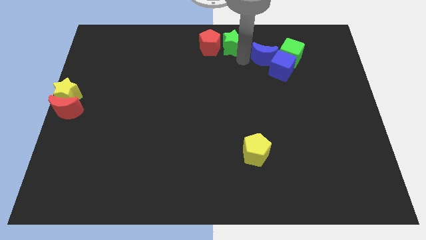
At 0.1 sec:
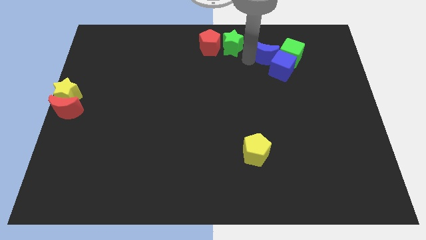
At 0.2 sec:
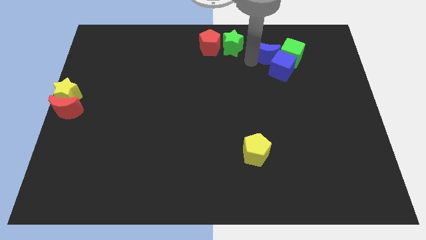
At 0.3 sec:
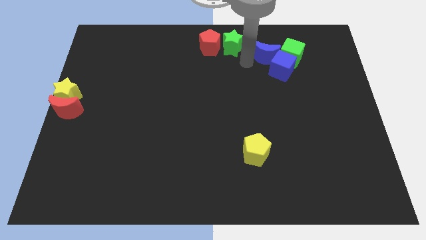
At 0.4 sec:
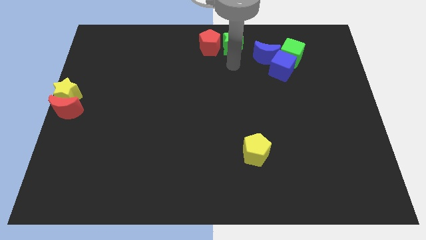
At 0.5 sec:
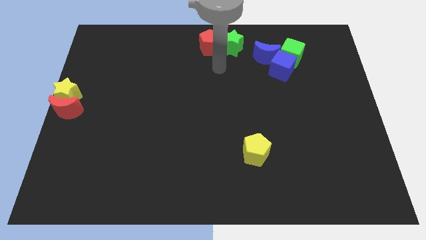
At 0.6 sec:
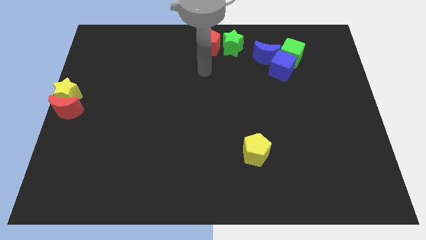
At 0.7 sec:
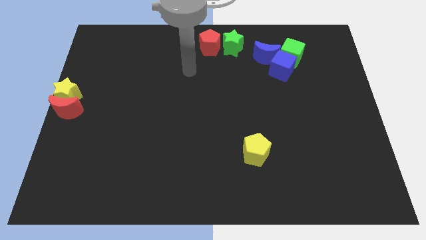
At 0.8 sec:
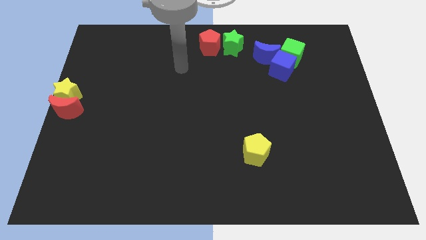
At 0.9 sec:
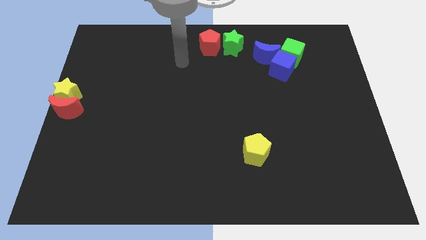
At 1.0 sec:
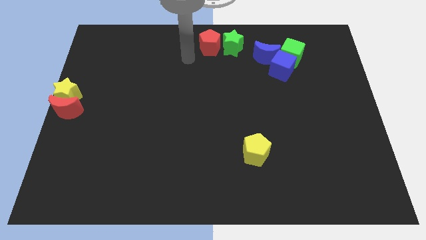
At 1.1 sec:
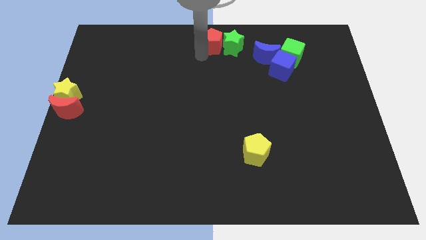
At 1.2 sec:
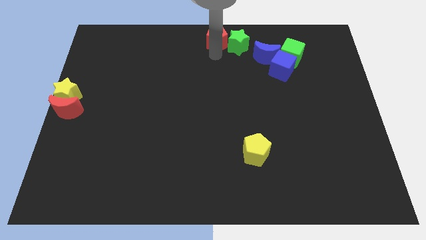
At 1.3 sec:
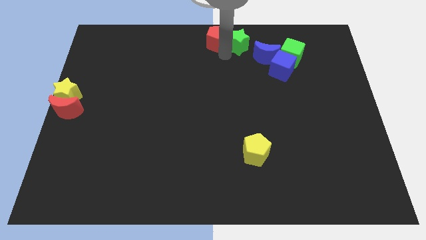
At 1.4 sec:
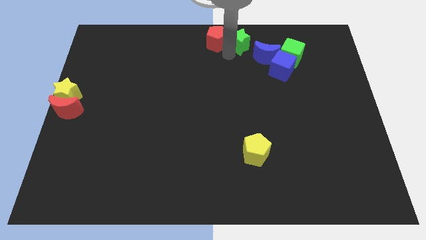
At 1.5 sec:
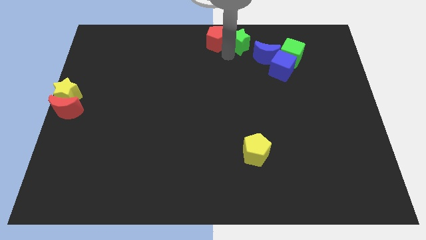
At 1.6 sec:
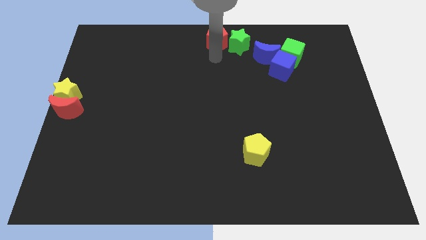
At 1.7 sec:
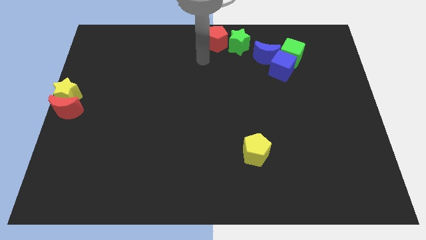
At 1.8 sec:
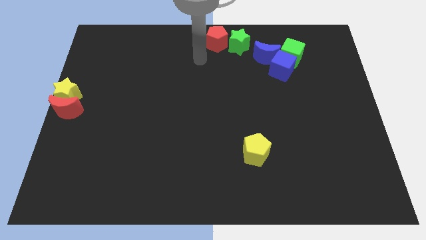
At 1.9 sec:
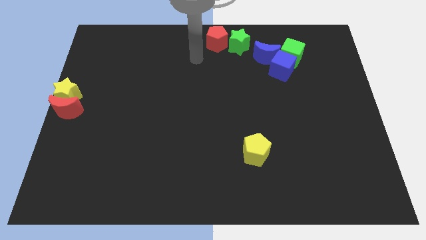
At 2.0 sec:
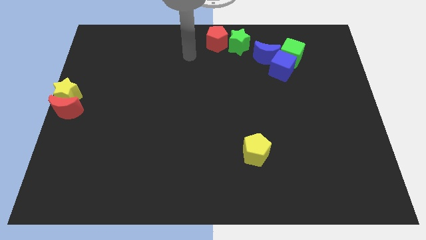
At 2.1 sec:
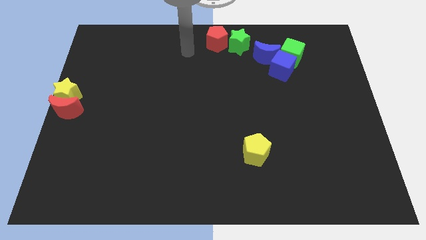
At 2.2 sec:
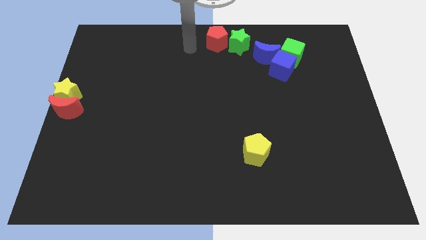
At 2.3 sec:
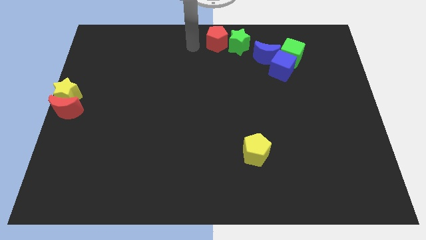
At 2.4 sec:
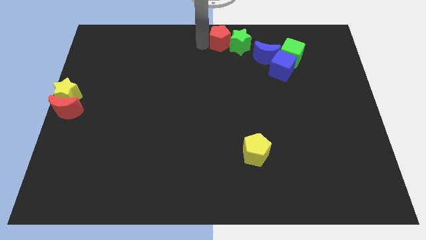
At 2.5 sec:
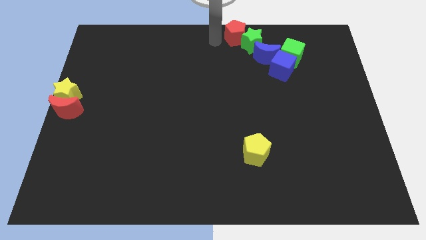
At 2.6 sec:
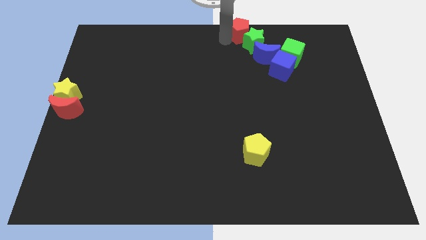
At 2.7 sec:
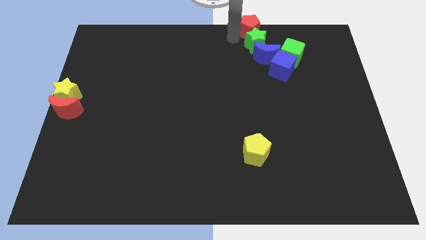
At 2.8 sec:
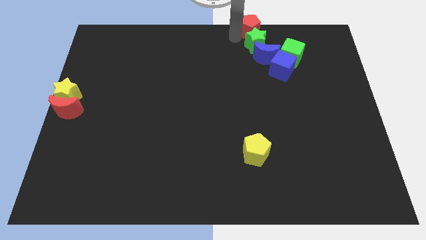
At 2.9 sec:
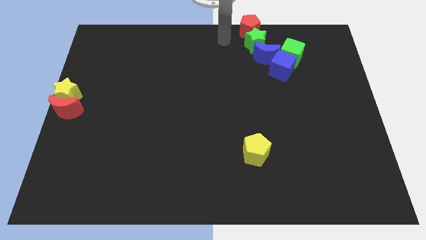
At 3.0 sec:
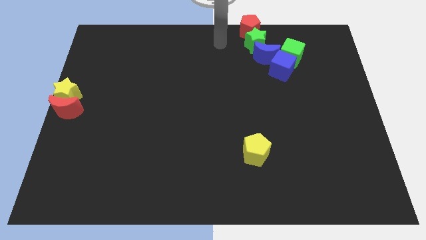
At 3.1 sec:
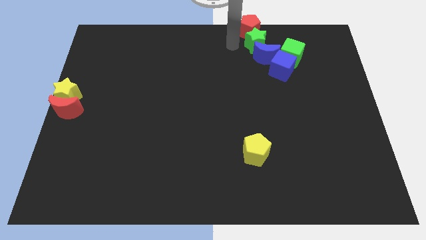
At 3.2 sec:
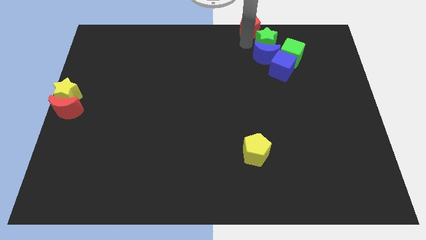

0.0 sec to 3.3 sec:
push the red pentagon above to the green star

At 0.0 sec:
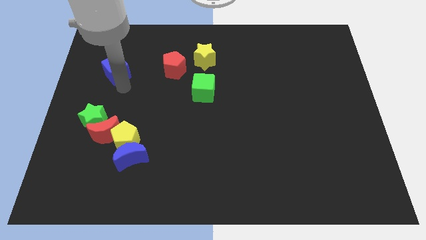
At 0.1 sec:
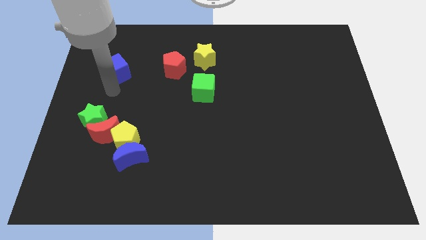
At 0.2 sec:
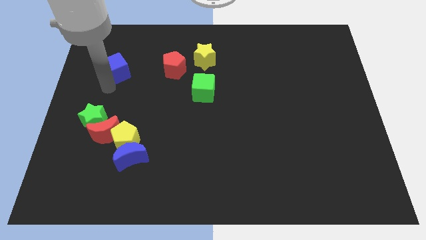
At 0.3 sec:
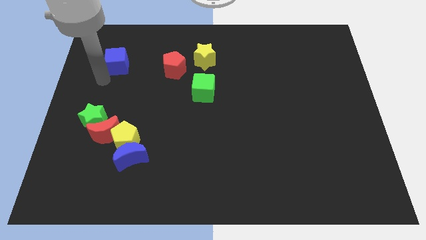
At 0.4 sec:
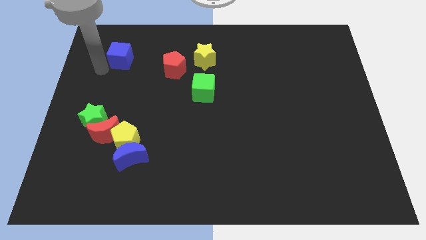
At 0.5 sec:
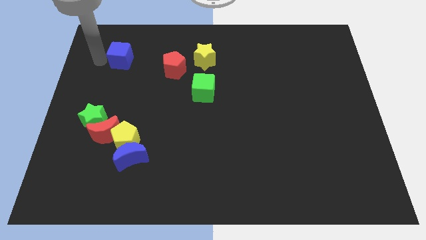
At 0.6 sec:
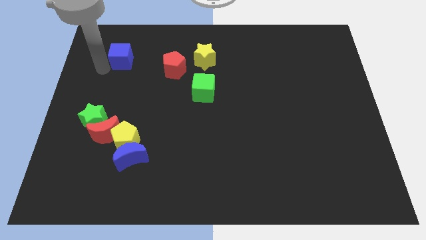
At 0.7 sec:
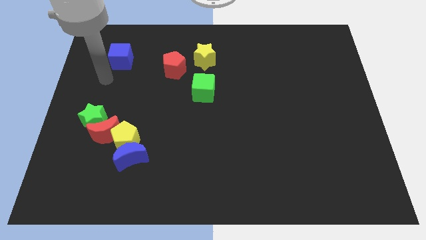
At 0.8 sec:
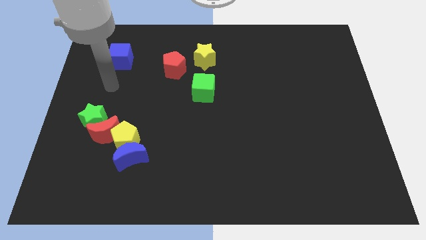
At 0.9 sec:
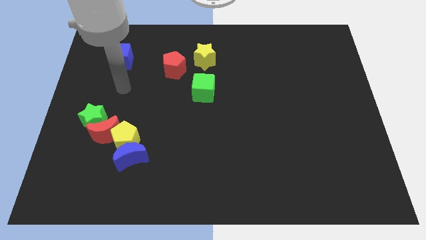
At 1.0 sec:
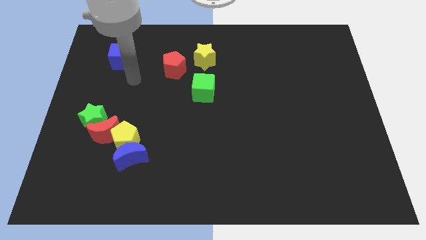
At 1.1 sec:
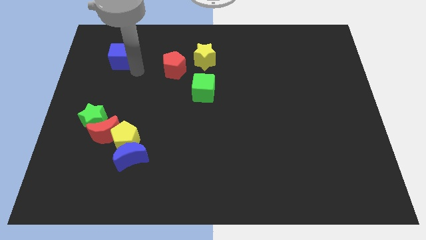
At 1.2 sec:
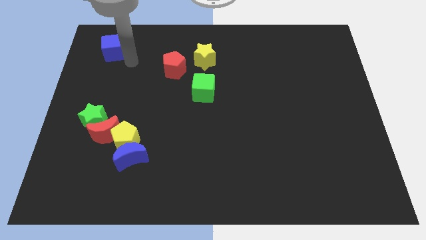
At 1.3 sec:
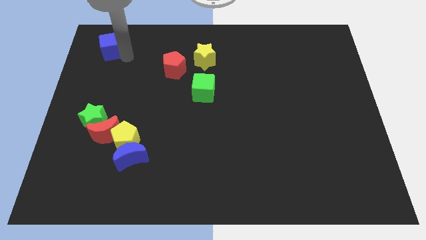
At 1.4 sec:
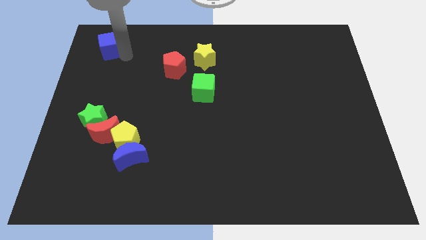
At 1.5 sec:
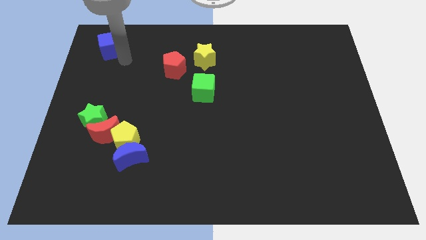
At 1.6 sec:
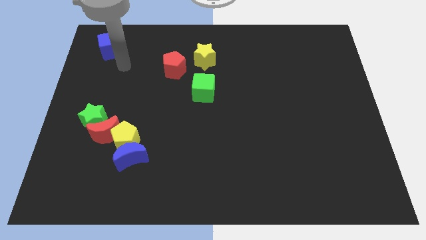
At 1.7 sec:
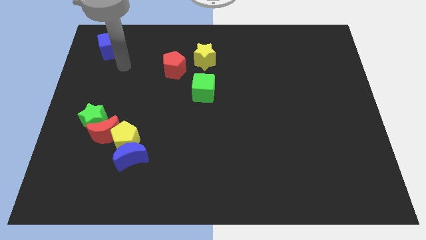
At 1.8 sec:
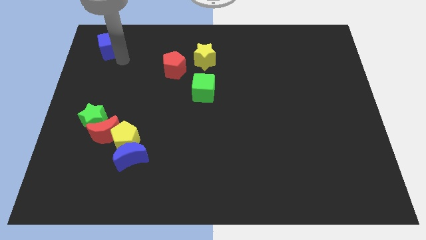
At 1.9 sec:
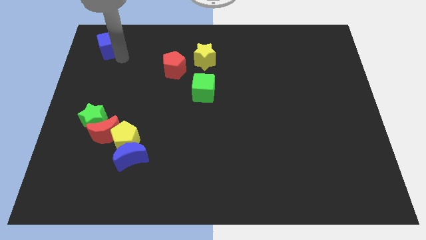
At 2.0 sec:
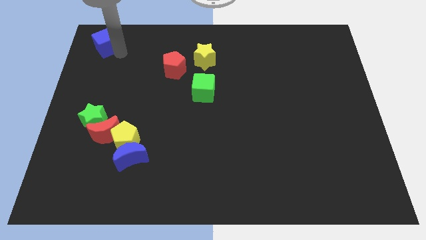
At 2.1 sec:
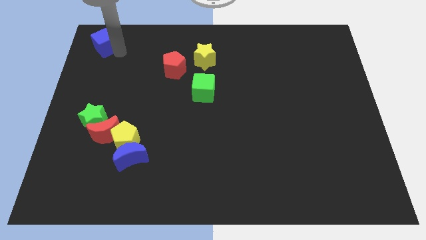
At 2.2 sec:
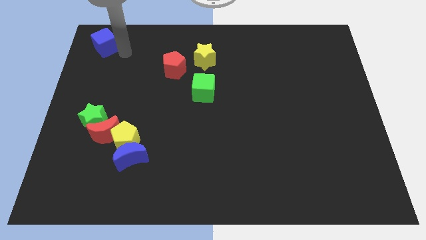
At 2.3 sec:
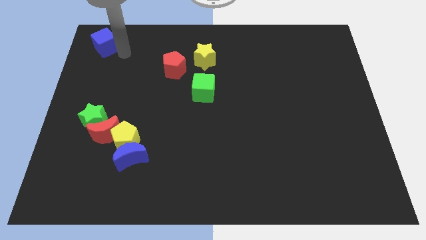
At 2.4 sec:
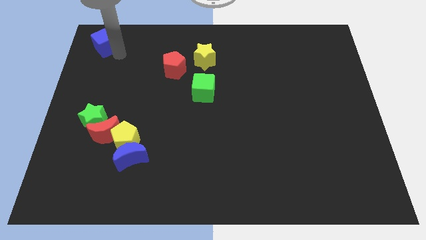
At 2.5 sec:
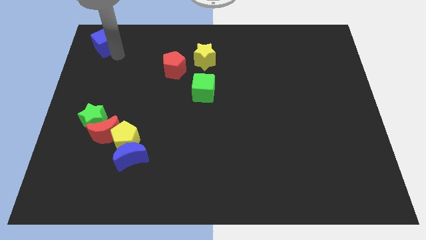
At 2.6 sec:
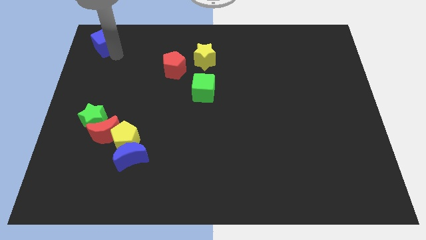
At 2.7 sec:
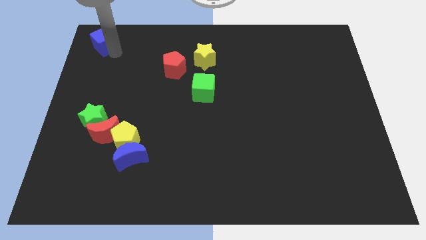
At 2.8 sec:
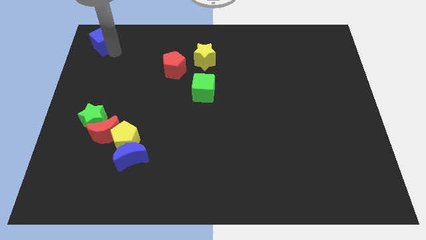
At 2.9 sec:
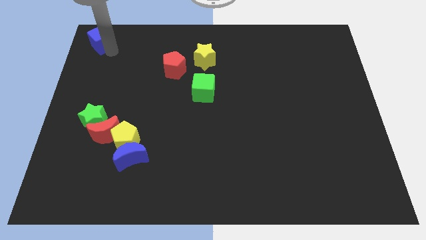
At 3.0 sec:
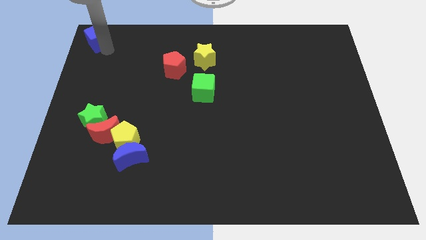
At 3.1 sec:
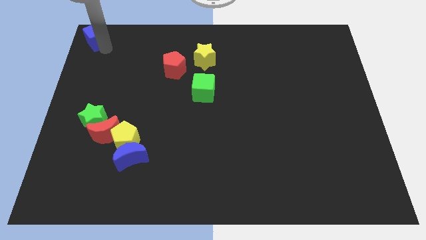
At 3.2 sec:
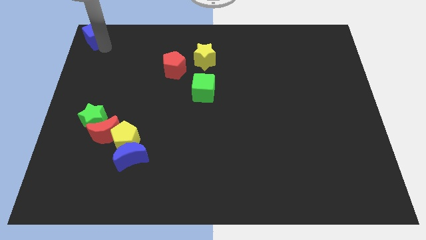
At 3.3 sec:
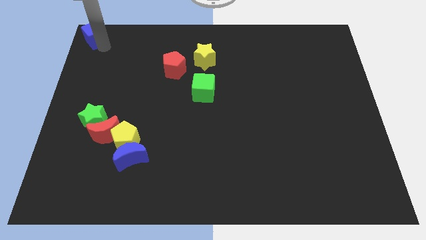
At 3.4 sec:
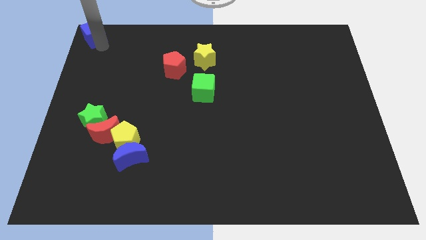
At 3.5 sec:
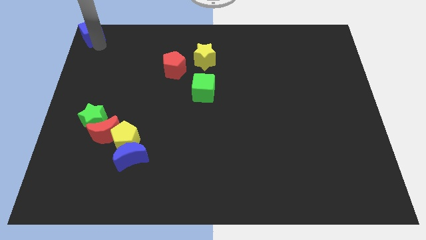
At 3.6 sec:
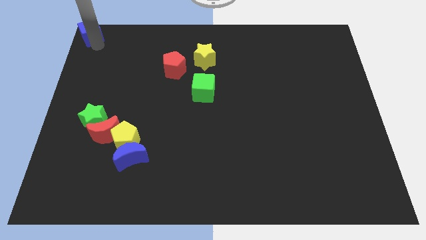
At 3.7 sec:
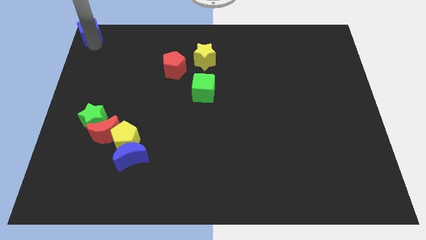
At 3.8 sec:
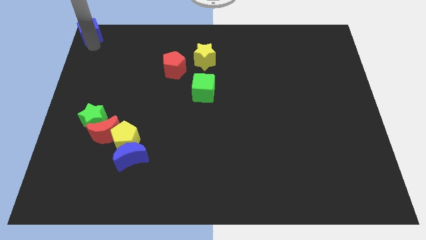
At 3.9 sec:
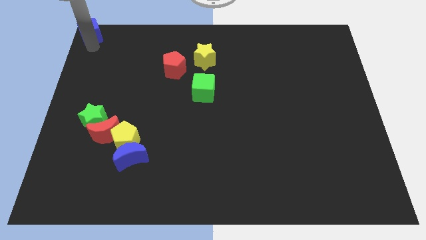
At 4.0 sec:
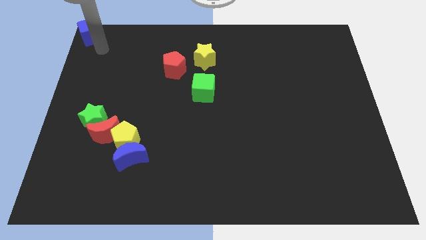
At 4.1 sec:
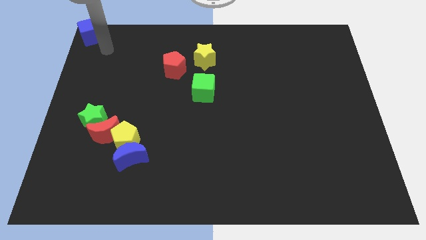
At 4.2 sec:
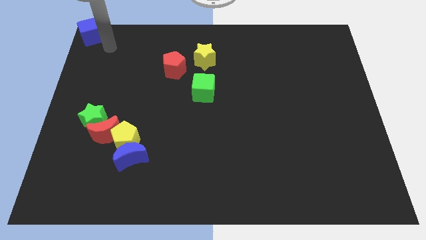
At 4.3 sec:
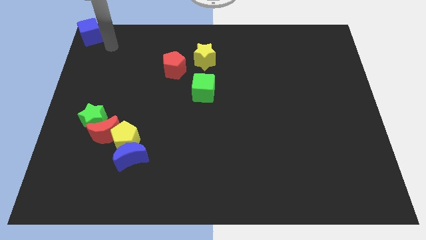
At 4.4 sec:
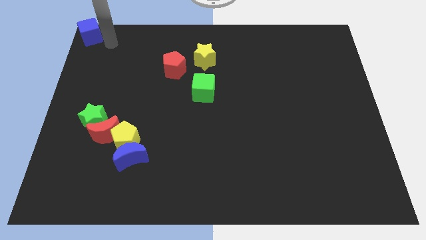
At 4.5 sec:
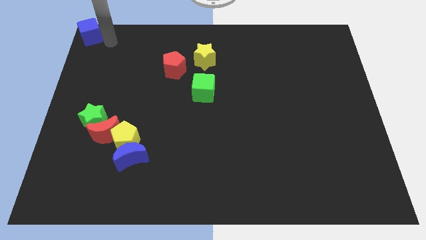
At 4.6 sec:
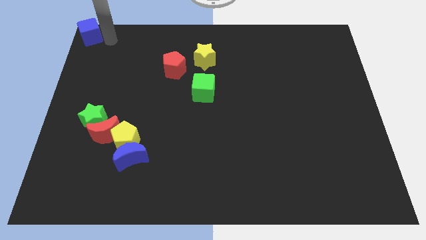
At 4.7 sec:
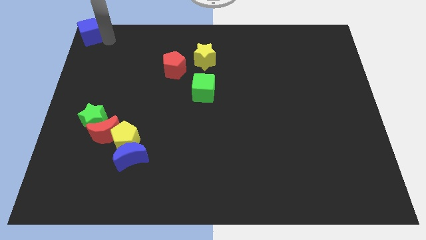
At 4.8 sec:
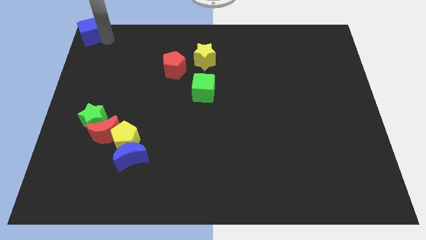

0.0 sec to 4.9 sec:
move the blue cube to the top left corner of the board

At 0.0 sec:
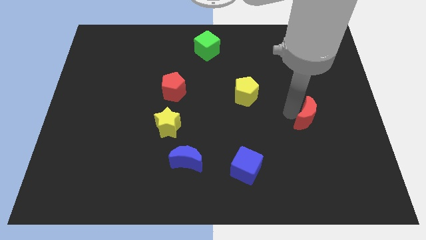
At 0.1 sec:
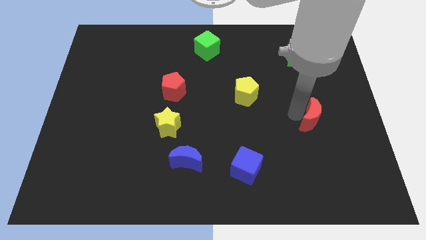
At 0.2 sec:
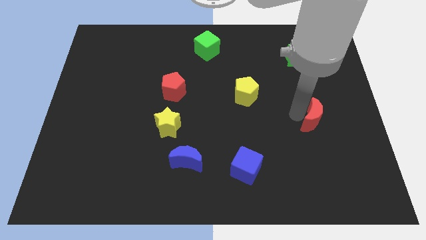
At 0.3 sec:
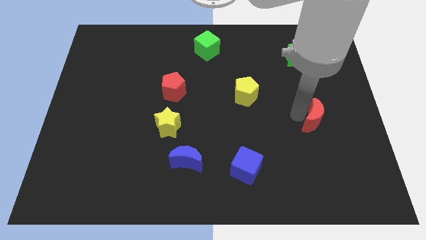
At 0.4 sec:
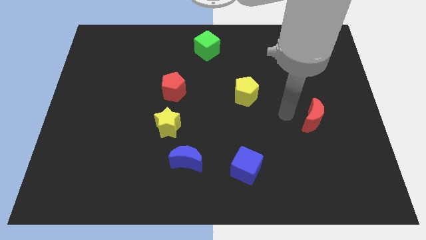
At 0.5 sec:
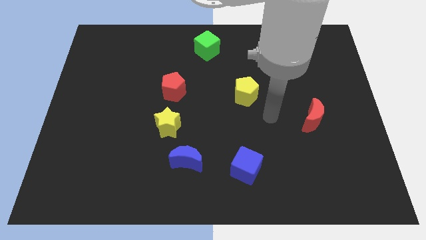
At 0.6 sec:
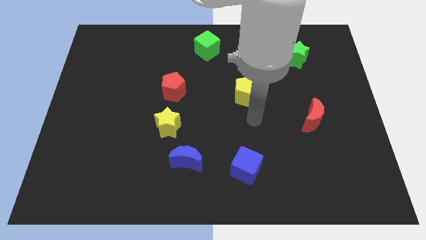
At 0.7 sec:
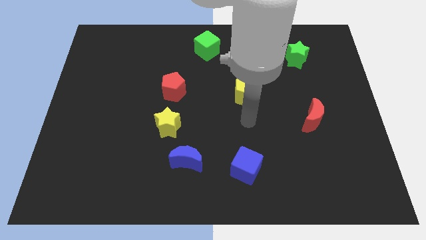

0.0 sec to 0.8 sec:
point your arm below yellow pentagon
